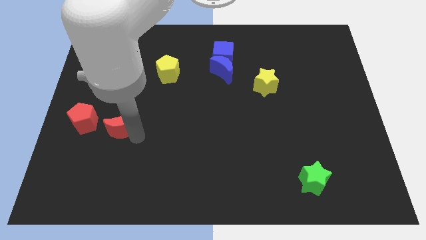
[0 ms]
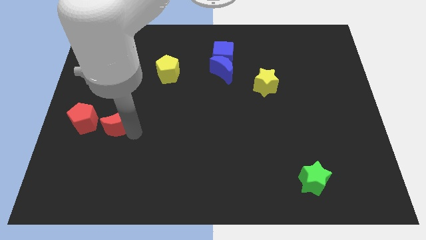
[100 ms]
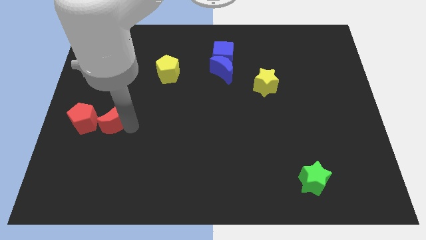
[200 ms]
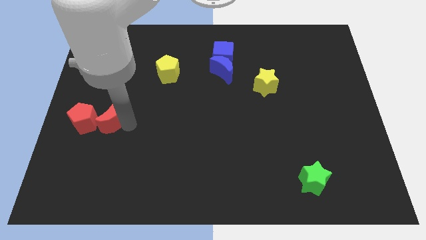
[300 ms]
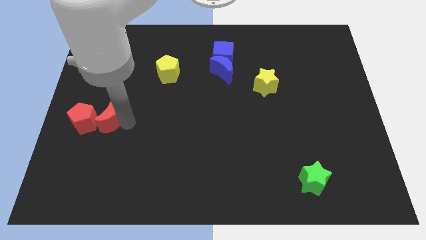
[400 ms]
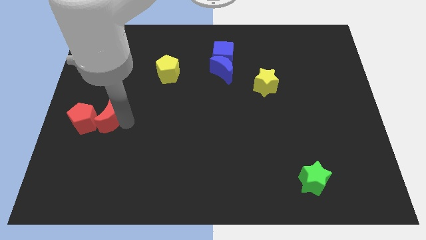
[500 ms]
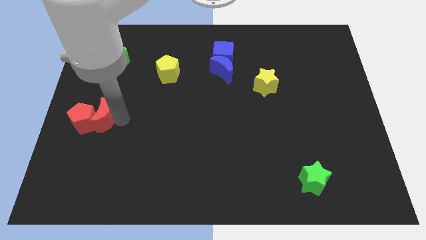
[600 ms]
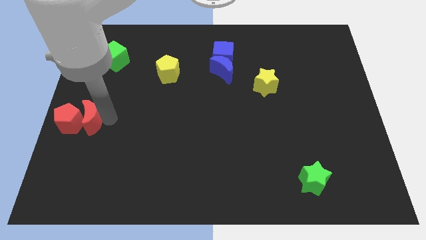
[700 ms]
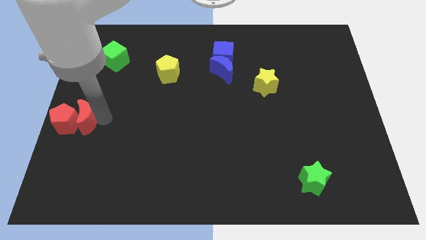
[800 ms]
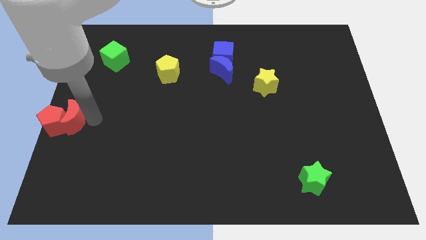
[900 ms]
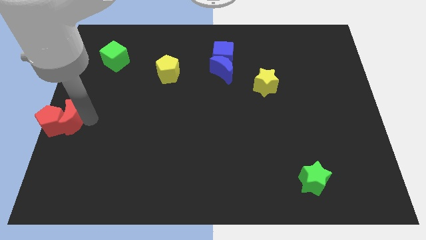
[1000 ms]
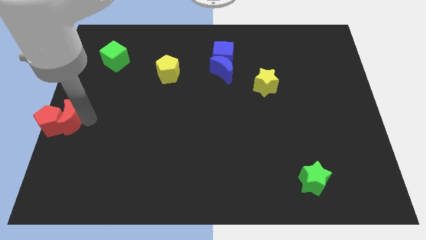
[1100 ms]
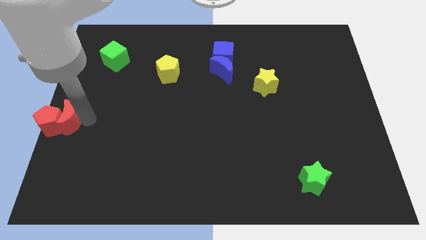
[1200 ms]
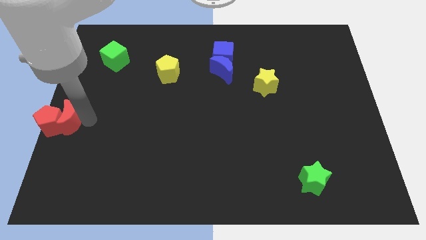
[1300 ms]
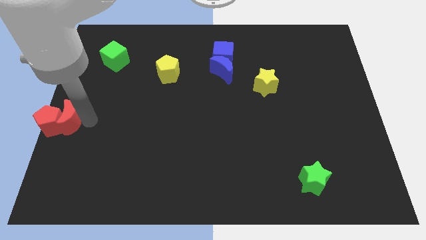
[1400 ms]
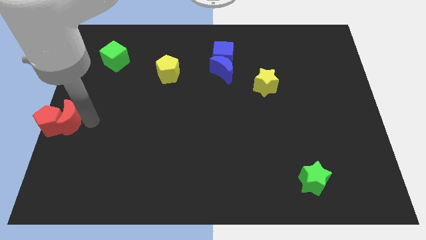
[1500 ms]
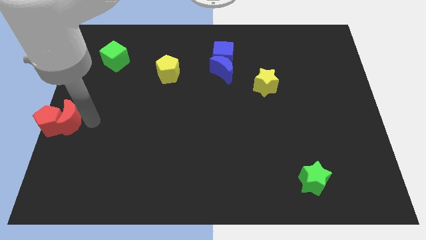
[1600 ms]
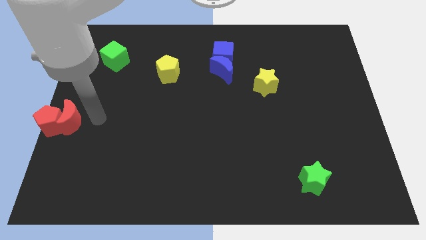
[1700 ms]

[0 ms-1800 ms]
push the red blocks towards the left center of the board

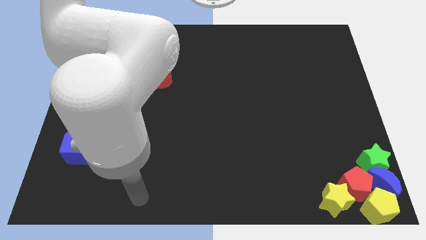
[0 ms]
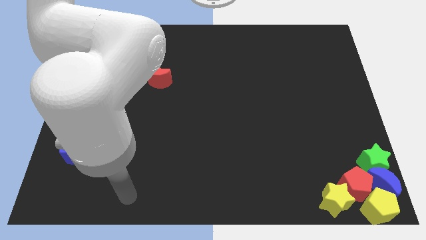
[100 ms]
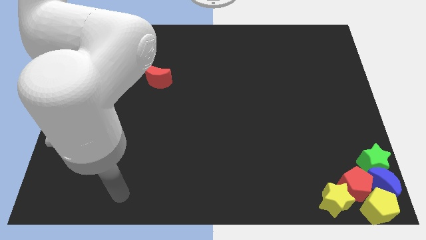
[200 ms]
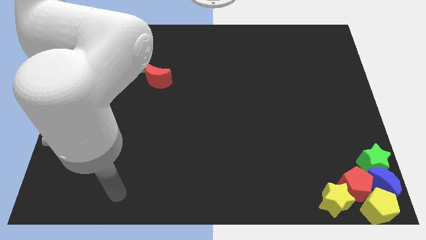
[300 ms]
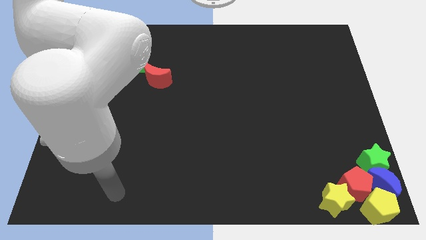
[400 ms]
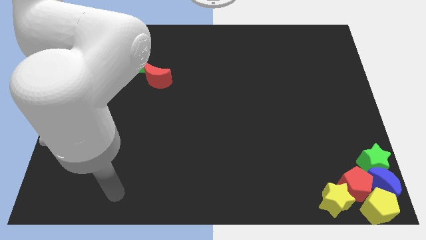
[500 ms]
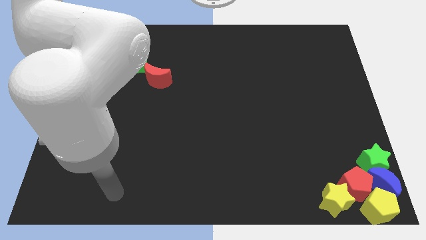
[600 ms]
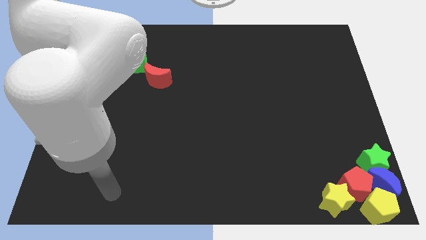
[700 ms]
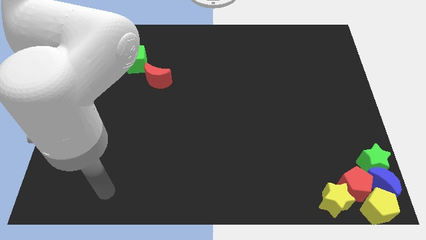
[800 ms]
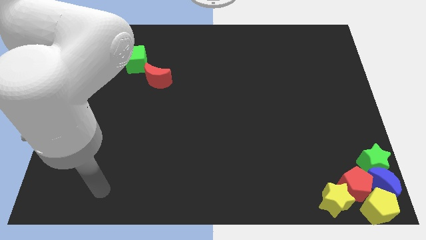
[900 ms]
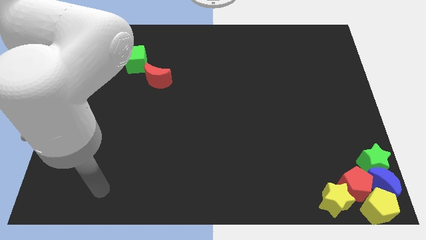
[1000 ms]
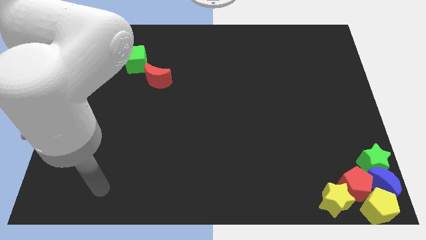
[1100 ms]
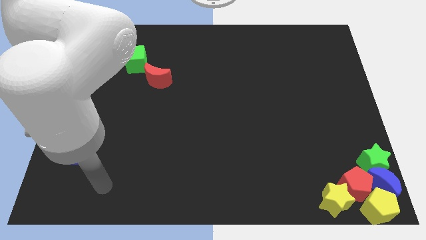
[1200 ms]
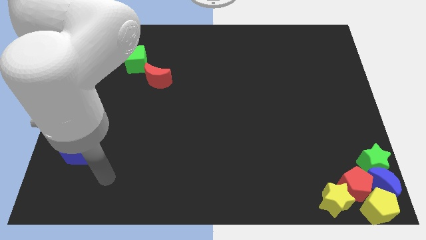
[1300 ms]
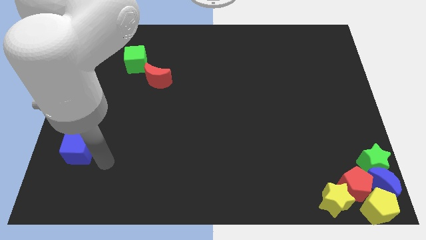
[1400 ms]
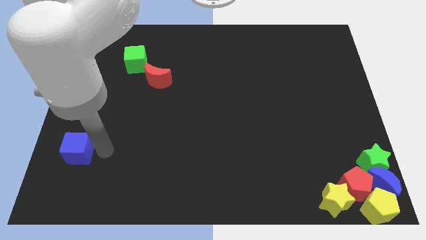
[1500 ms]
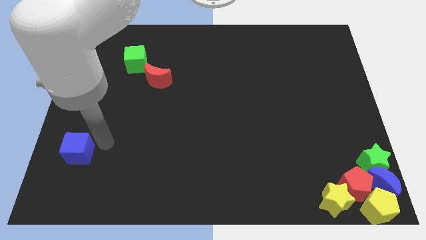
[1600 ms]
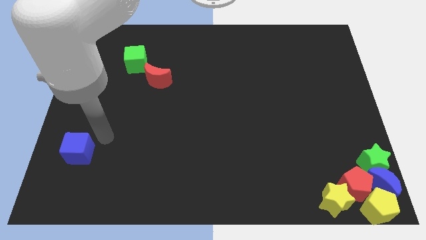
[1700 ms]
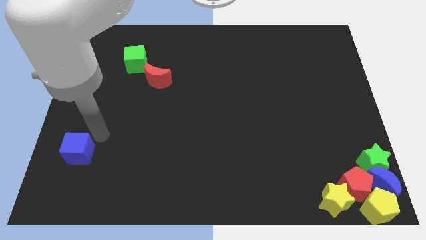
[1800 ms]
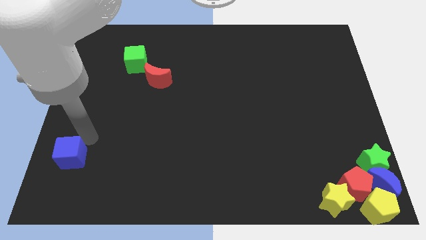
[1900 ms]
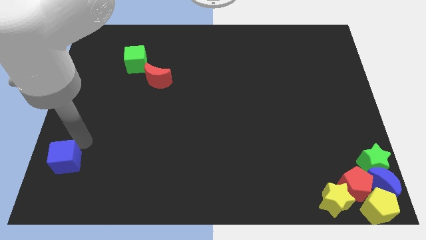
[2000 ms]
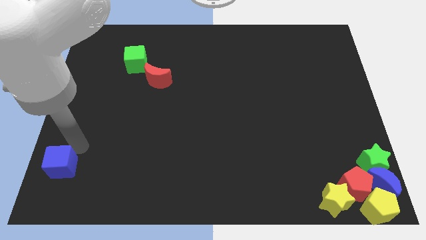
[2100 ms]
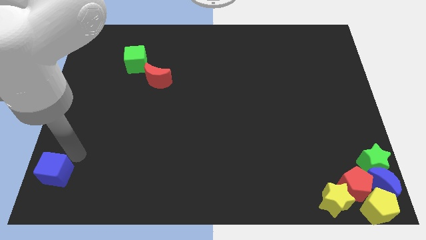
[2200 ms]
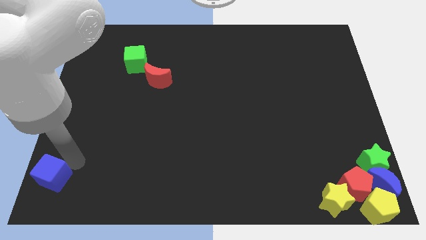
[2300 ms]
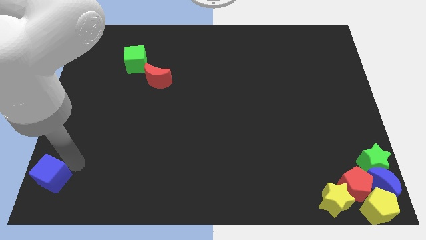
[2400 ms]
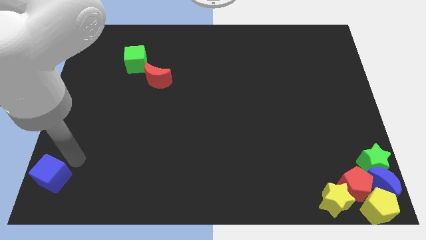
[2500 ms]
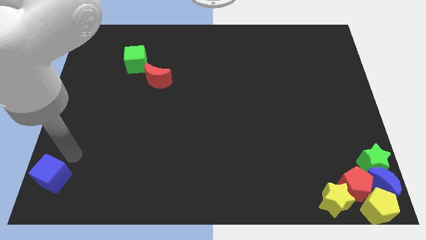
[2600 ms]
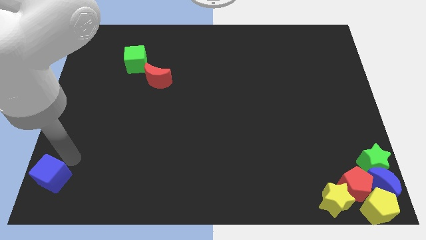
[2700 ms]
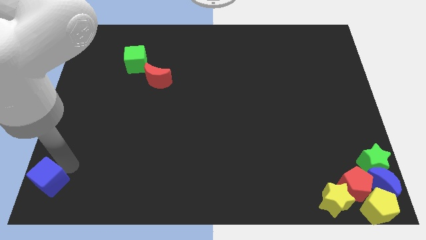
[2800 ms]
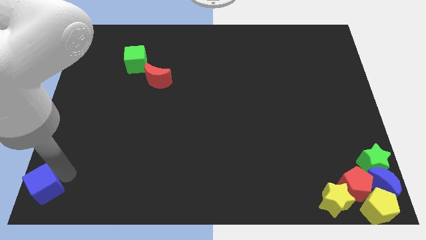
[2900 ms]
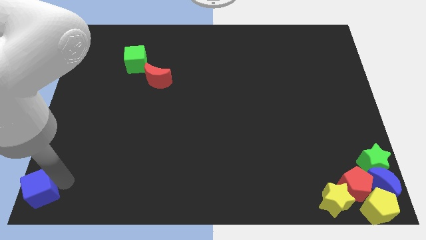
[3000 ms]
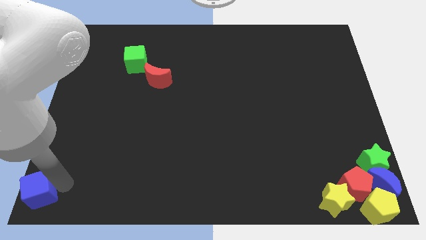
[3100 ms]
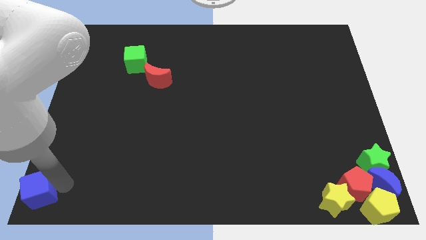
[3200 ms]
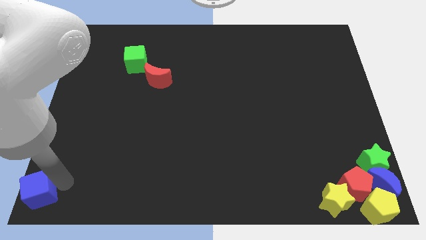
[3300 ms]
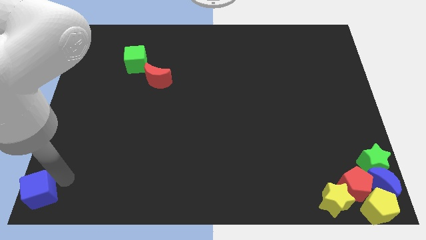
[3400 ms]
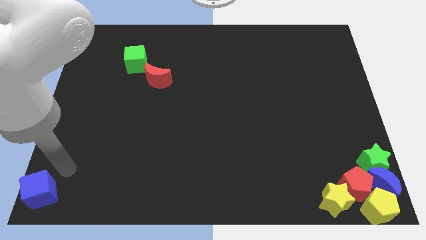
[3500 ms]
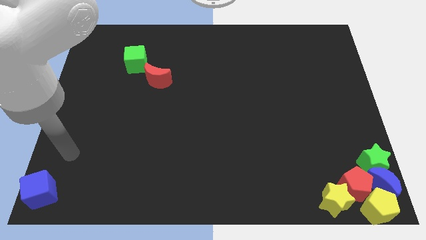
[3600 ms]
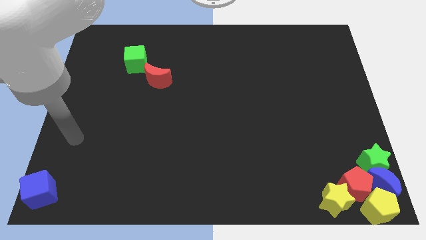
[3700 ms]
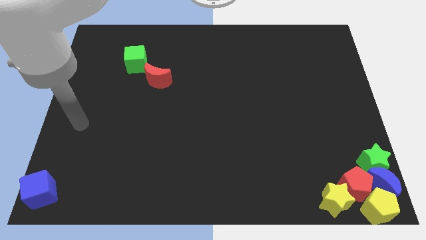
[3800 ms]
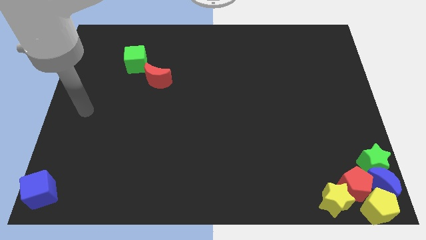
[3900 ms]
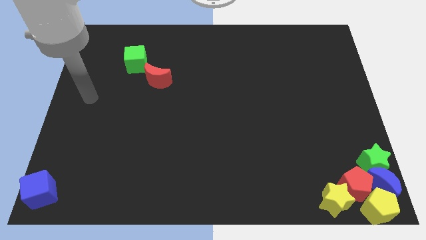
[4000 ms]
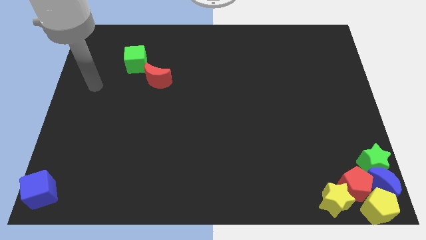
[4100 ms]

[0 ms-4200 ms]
move the blue cube to the bottom left corner

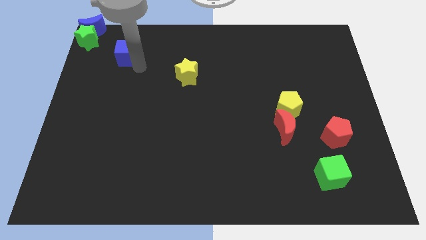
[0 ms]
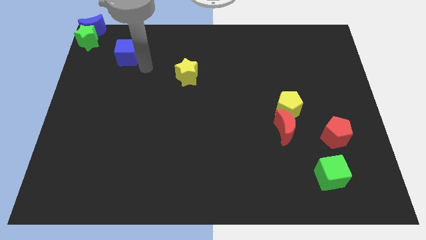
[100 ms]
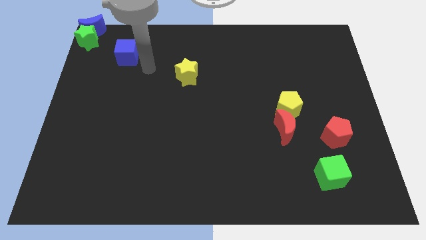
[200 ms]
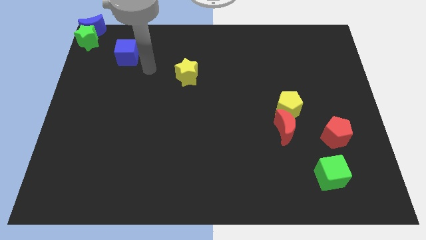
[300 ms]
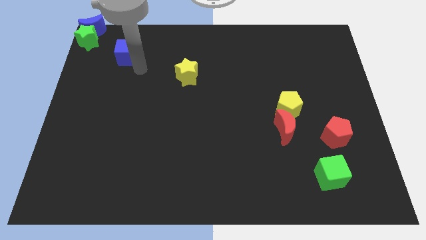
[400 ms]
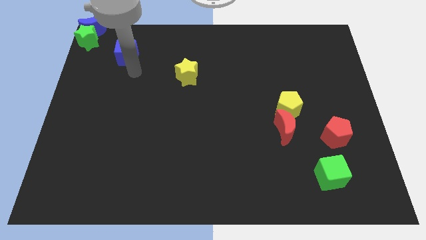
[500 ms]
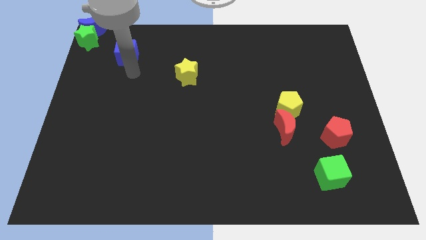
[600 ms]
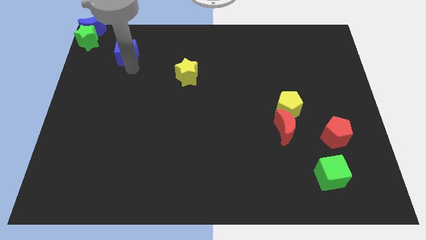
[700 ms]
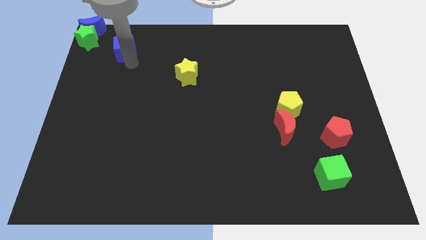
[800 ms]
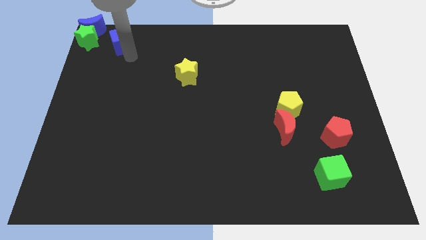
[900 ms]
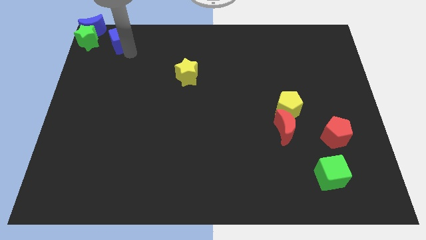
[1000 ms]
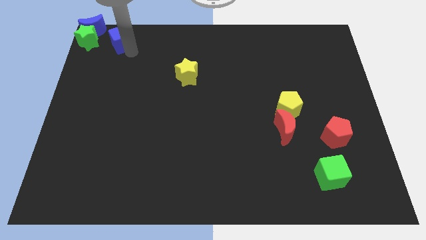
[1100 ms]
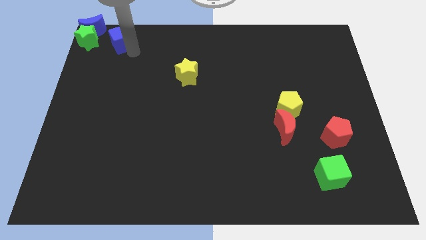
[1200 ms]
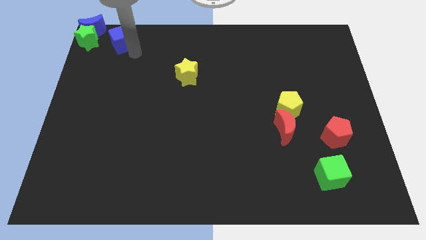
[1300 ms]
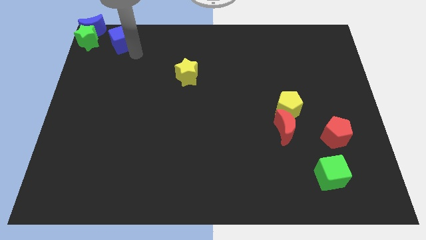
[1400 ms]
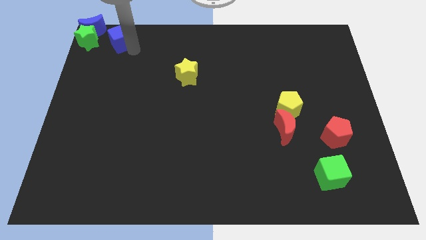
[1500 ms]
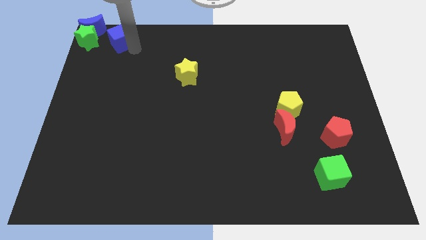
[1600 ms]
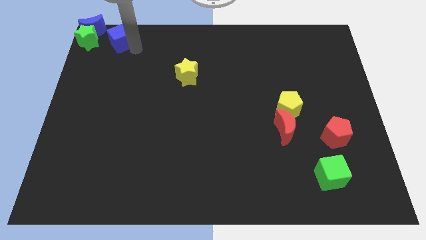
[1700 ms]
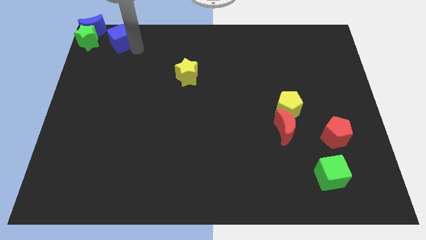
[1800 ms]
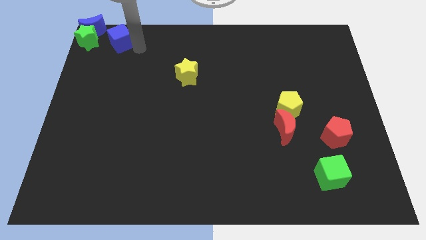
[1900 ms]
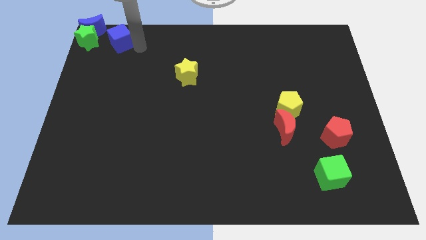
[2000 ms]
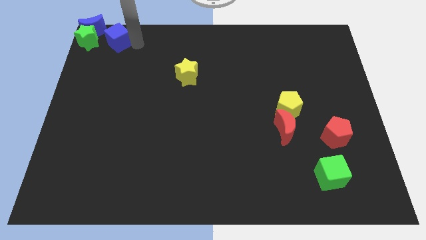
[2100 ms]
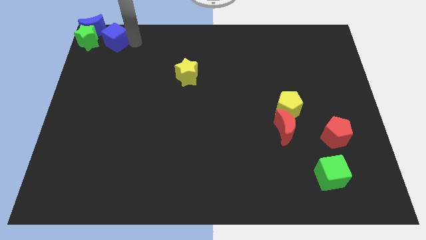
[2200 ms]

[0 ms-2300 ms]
move blue cube close to the green star and blue crescent

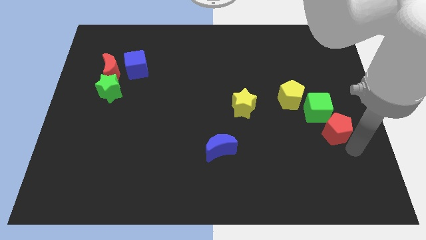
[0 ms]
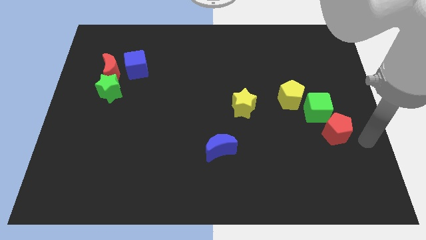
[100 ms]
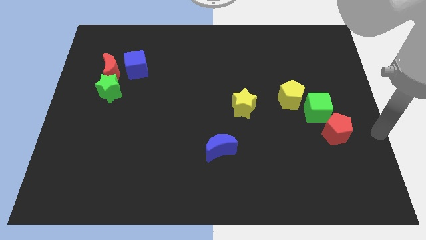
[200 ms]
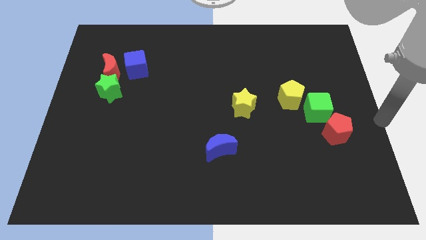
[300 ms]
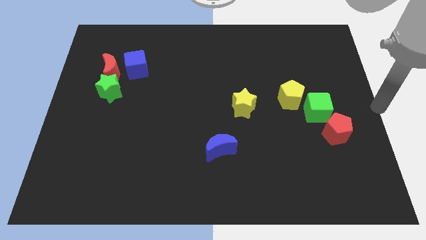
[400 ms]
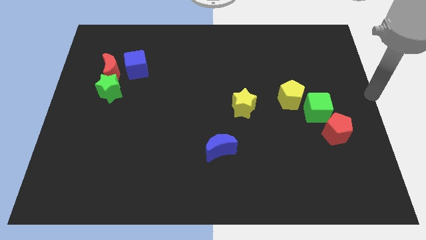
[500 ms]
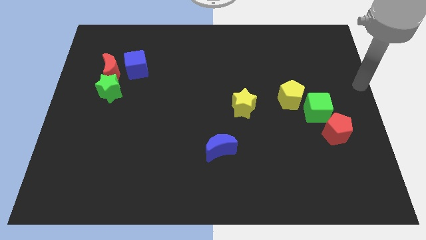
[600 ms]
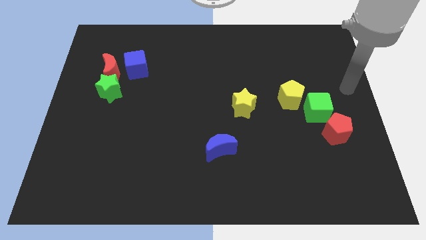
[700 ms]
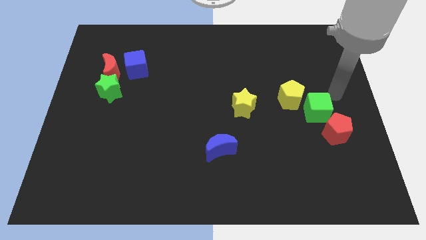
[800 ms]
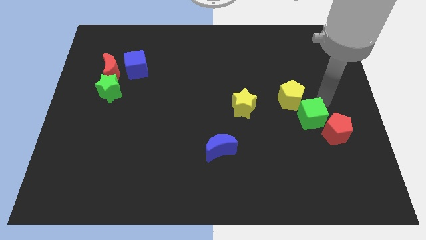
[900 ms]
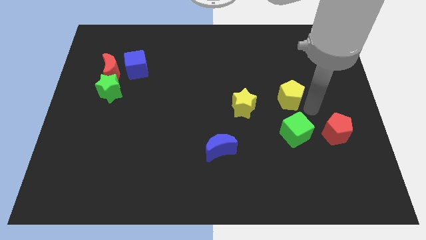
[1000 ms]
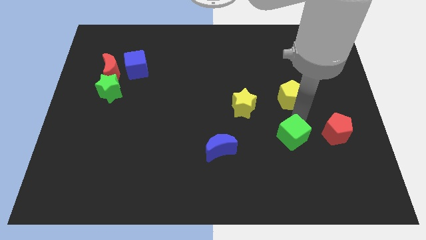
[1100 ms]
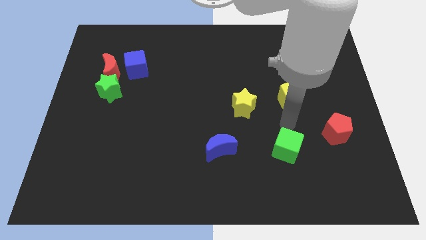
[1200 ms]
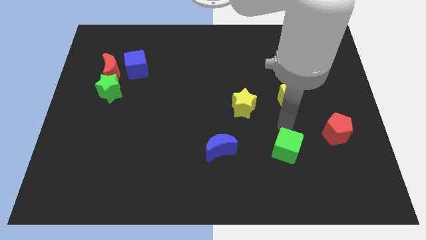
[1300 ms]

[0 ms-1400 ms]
push the green cube right to the blue moon
